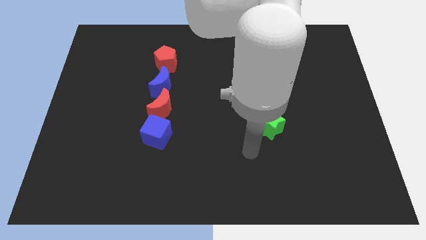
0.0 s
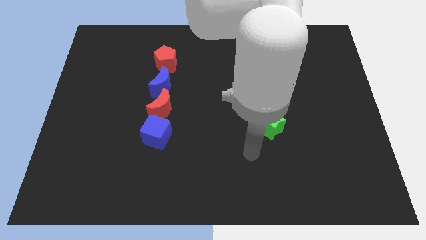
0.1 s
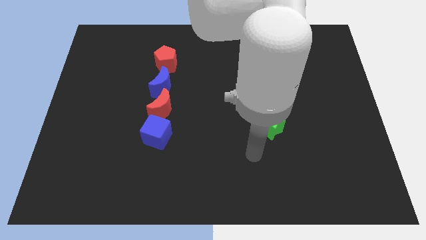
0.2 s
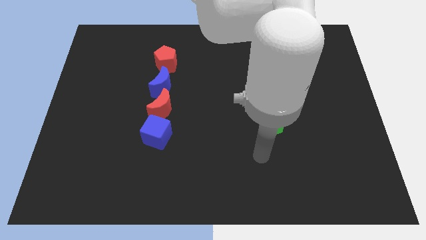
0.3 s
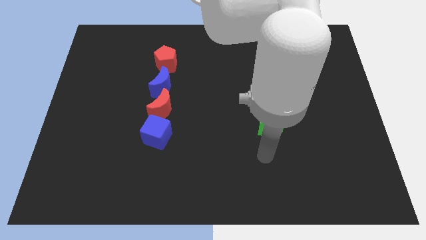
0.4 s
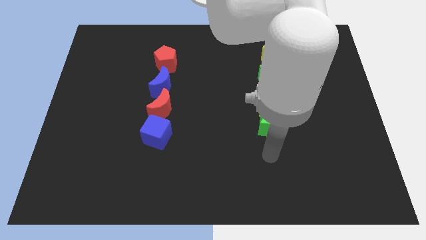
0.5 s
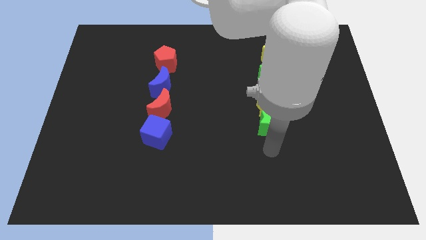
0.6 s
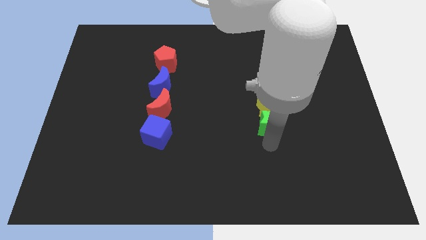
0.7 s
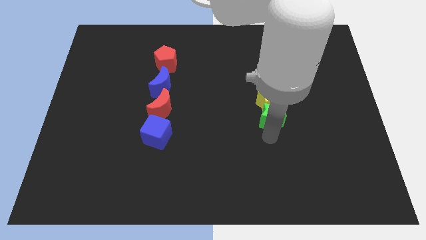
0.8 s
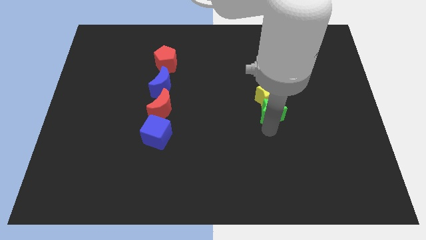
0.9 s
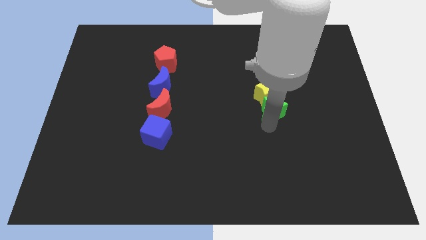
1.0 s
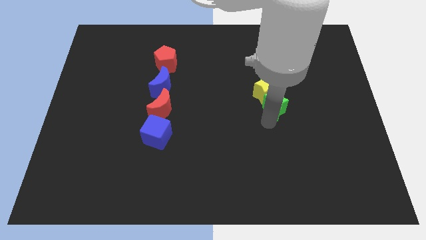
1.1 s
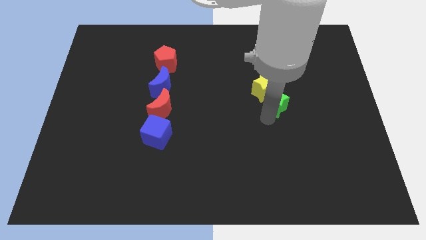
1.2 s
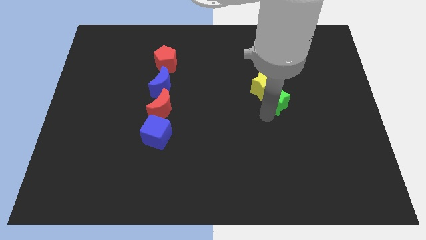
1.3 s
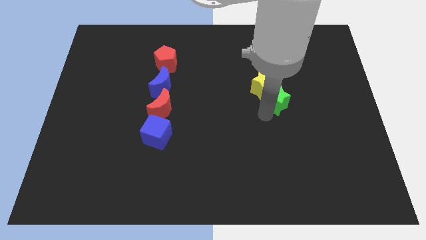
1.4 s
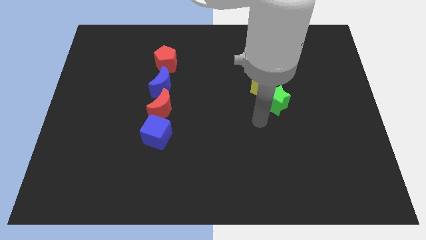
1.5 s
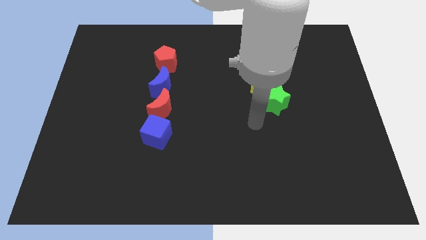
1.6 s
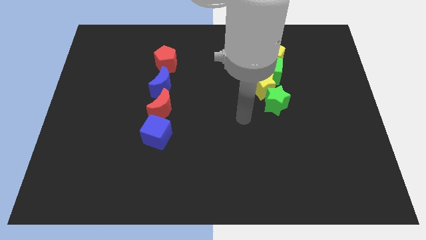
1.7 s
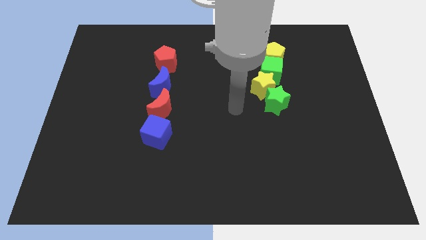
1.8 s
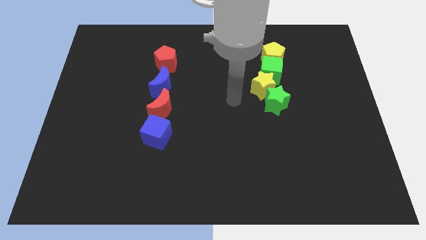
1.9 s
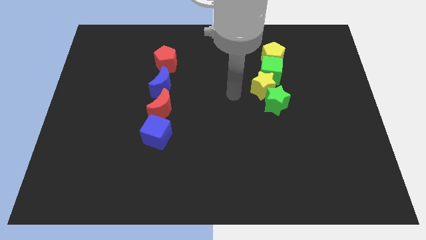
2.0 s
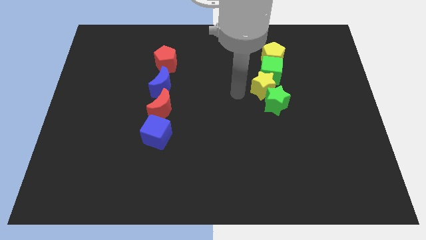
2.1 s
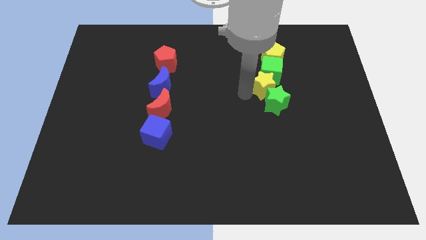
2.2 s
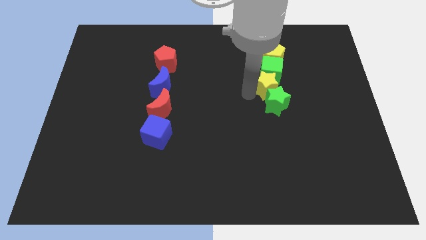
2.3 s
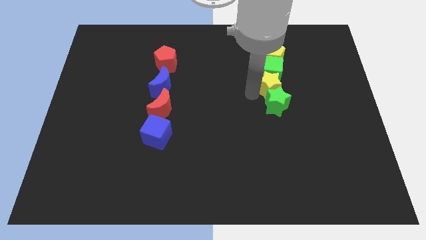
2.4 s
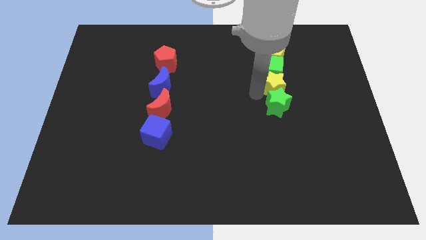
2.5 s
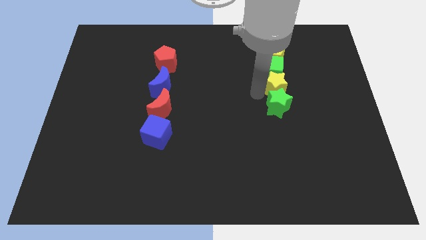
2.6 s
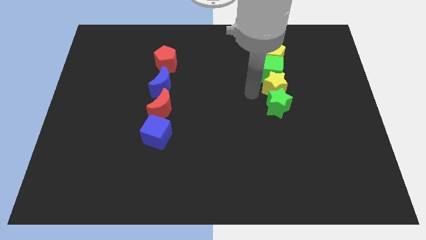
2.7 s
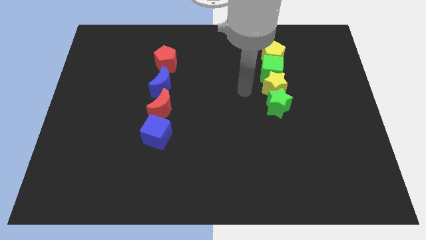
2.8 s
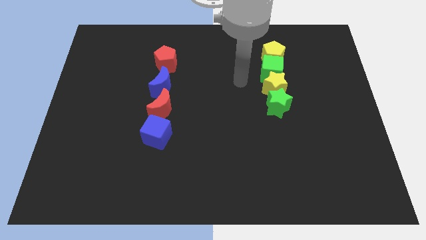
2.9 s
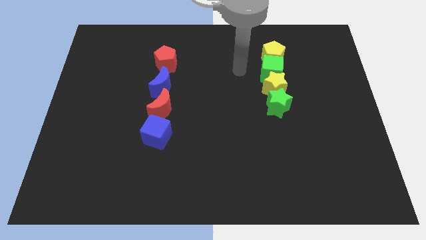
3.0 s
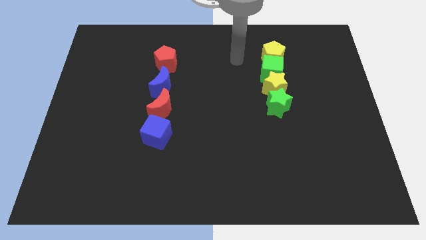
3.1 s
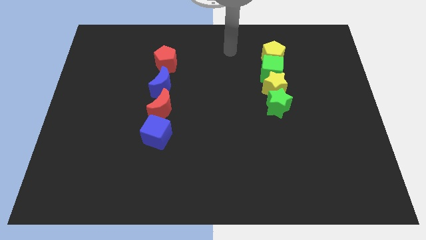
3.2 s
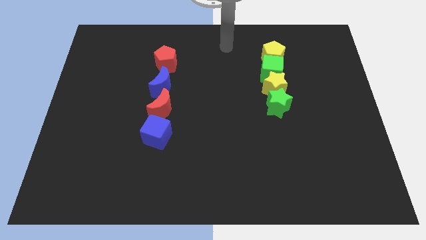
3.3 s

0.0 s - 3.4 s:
place the yellow star in between the green star and green cube

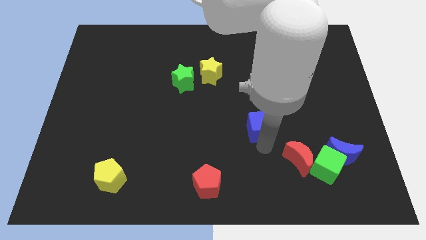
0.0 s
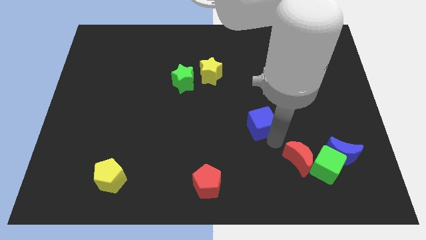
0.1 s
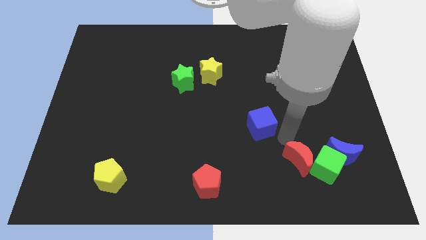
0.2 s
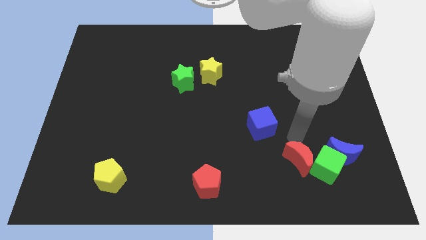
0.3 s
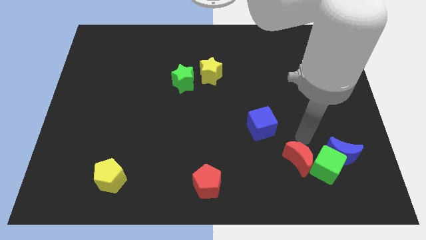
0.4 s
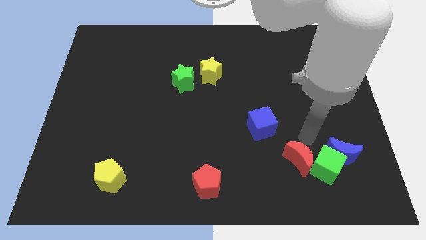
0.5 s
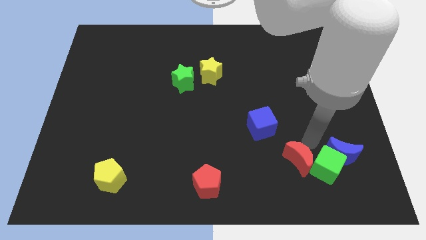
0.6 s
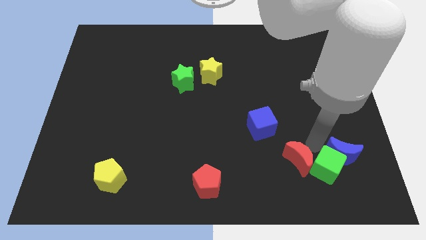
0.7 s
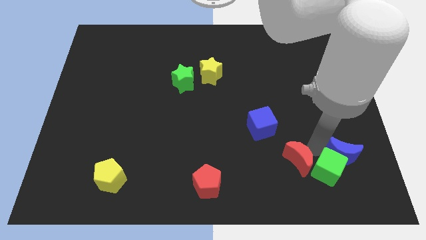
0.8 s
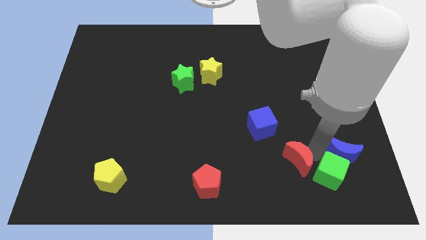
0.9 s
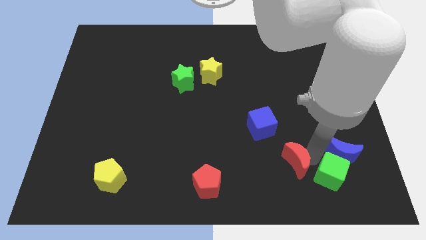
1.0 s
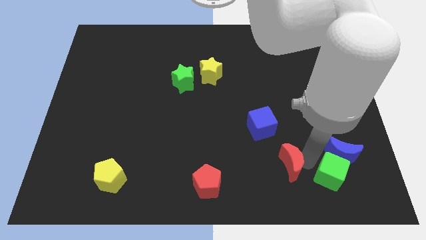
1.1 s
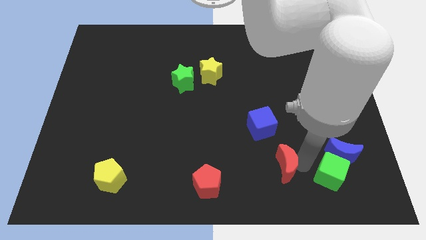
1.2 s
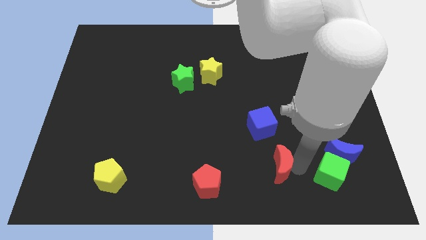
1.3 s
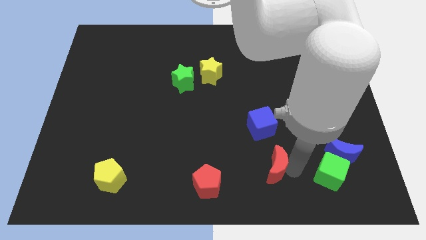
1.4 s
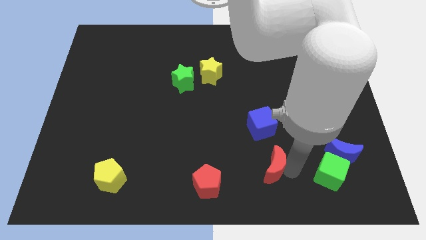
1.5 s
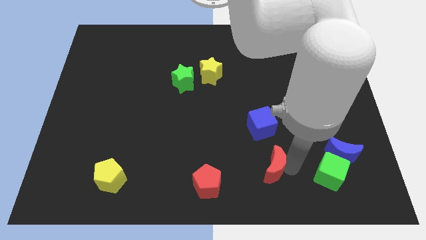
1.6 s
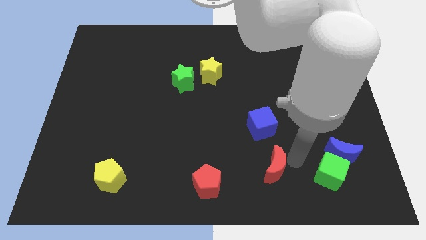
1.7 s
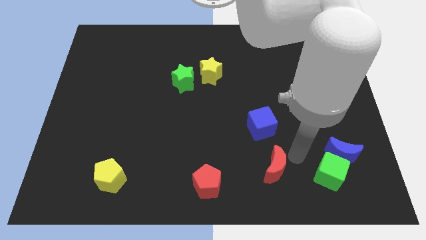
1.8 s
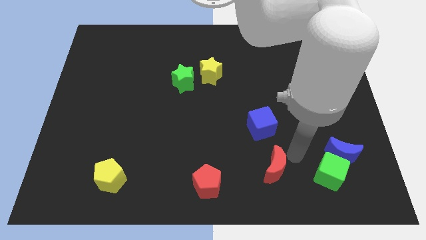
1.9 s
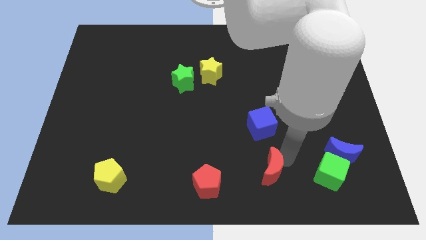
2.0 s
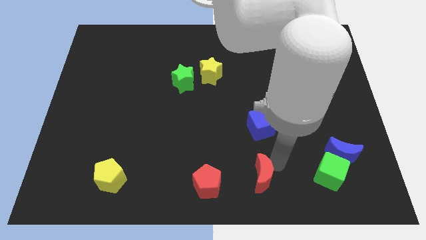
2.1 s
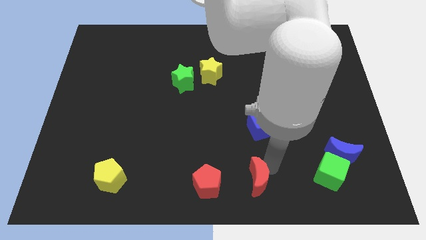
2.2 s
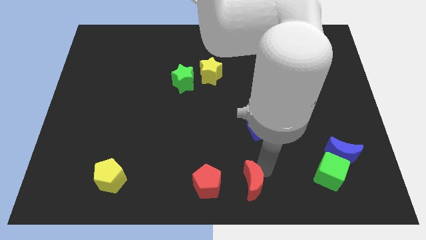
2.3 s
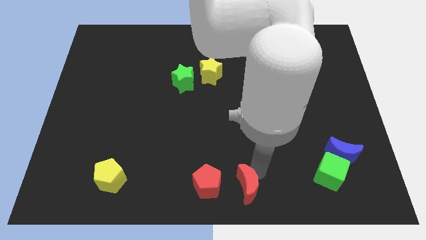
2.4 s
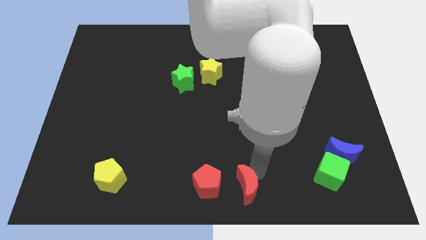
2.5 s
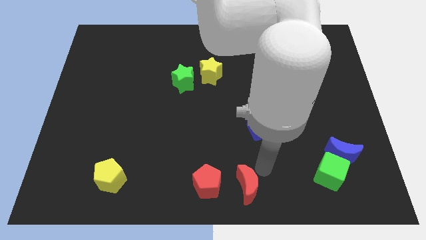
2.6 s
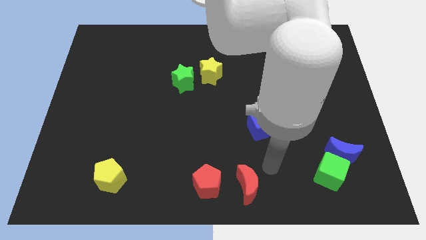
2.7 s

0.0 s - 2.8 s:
separate green cube and red crescent

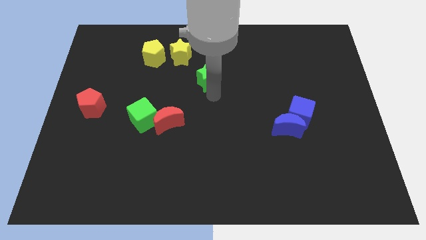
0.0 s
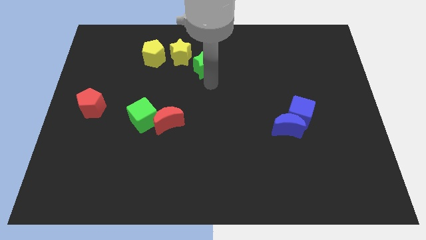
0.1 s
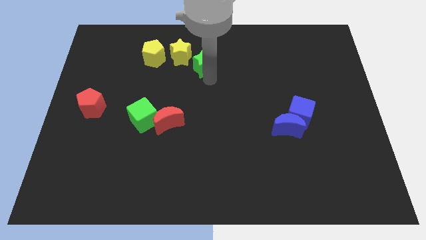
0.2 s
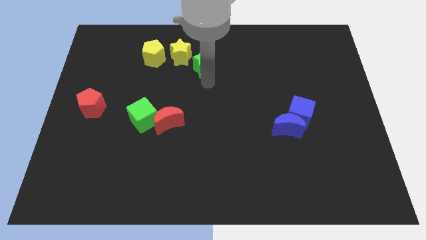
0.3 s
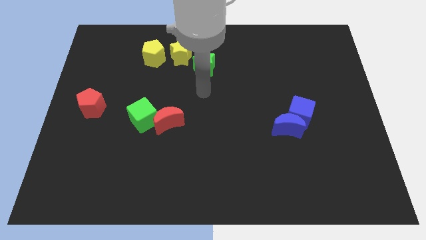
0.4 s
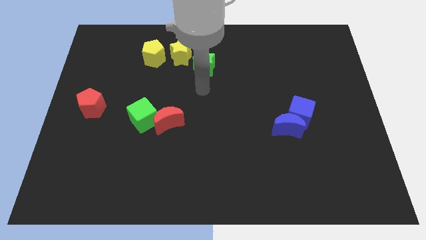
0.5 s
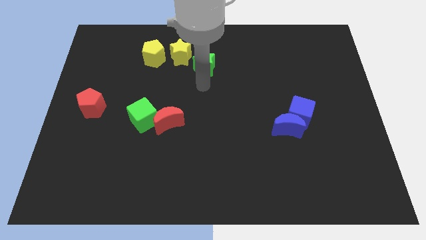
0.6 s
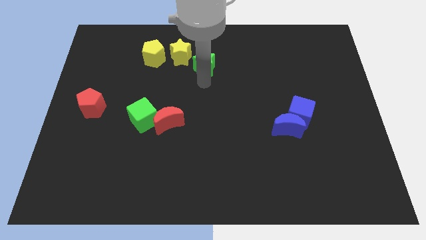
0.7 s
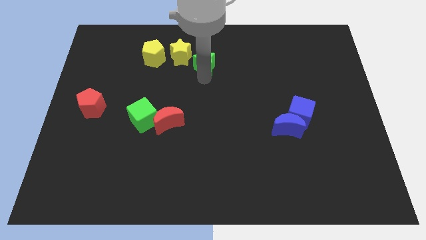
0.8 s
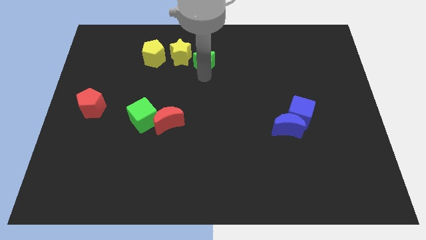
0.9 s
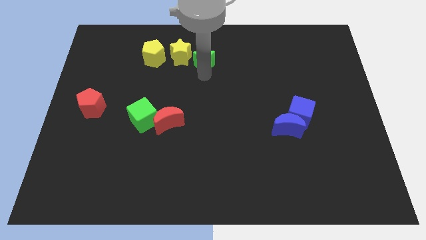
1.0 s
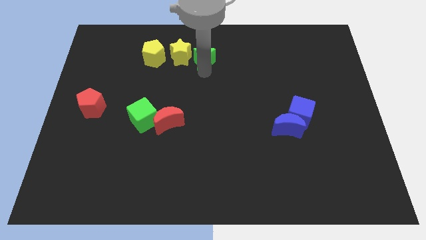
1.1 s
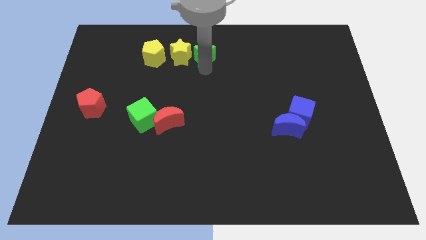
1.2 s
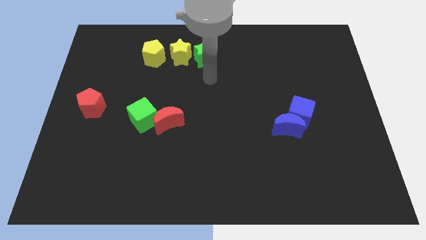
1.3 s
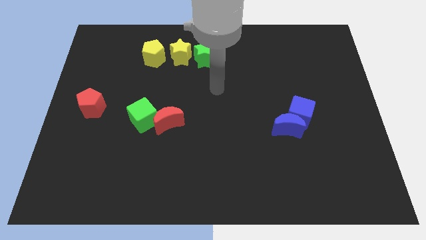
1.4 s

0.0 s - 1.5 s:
push the green star towards the top center of the board

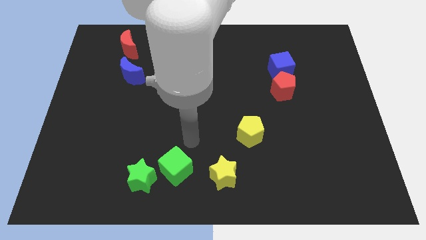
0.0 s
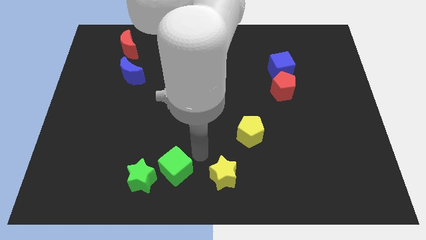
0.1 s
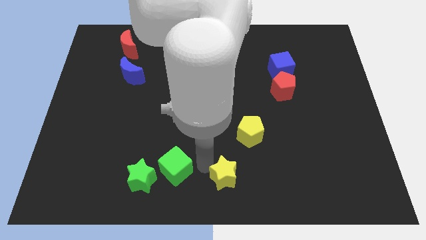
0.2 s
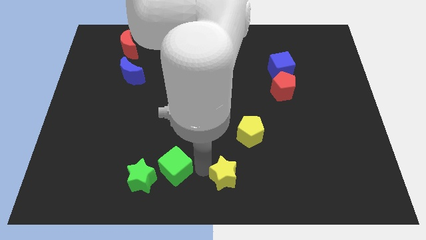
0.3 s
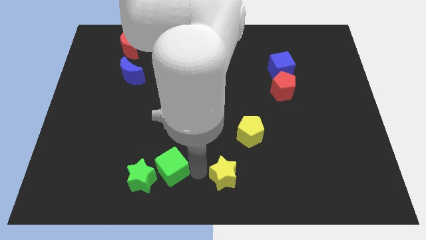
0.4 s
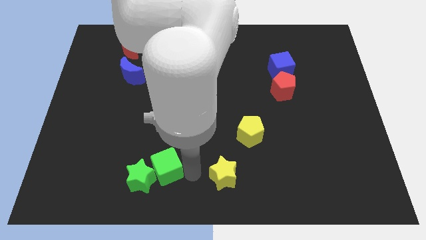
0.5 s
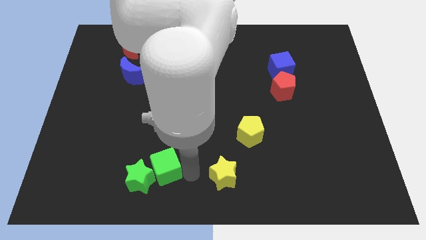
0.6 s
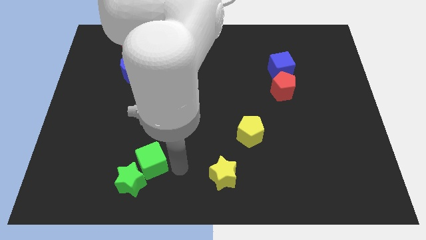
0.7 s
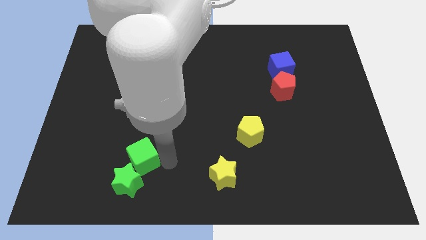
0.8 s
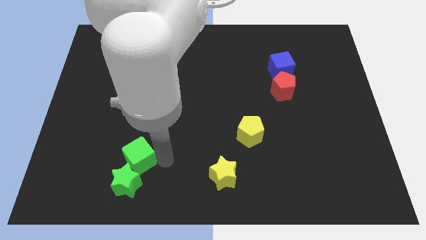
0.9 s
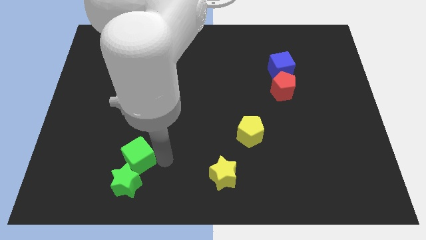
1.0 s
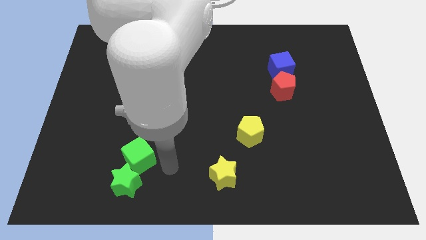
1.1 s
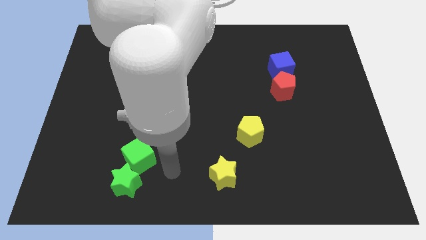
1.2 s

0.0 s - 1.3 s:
push the group of green blocks slightly towards the left
